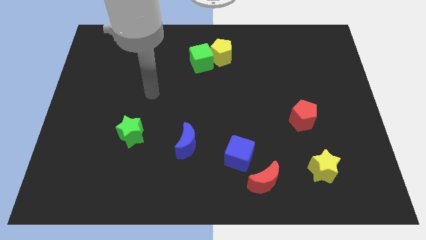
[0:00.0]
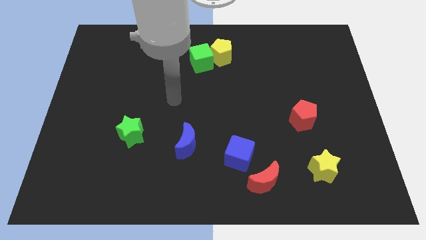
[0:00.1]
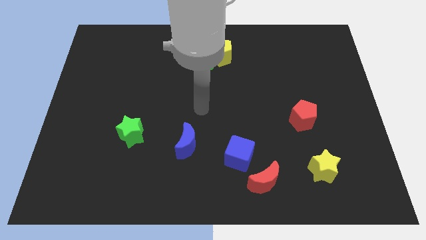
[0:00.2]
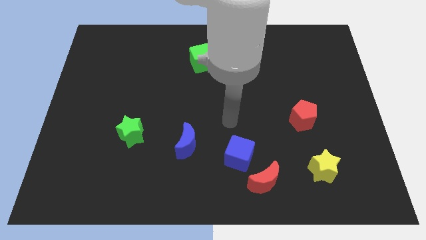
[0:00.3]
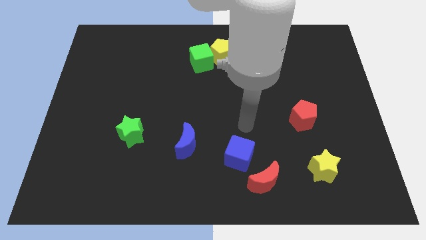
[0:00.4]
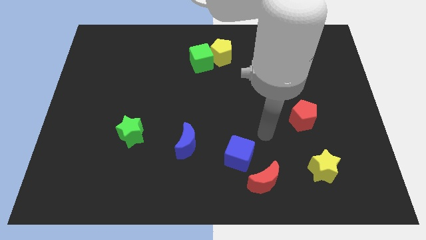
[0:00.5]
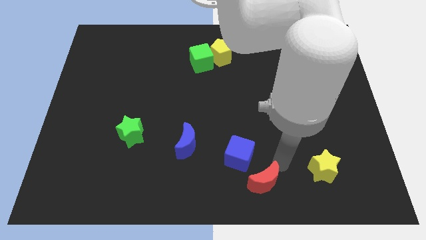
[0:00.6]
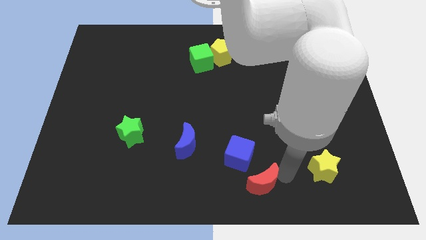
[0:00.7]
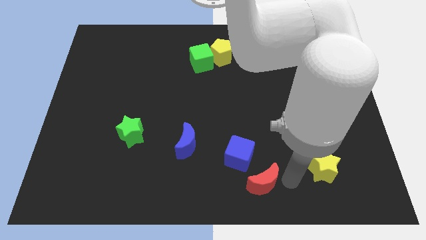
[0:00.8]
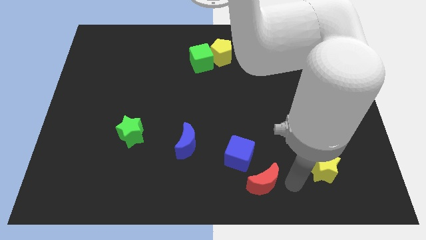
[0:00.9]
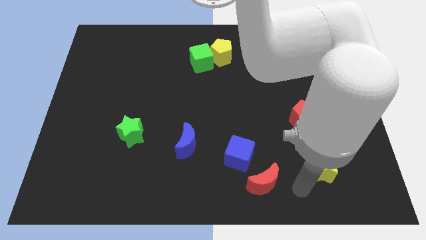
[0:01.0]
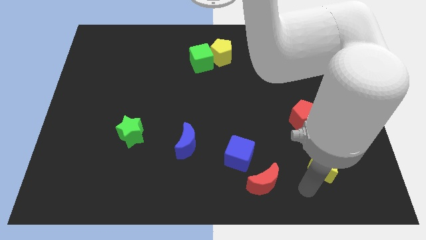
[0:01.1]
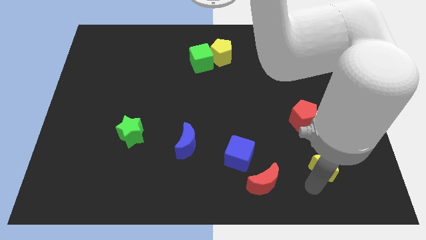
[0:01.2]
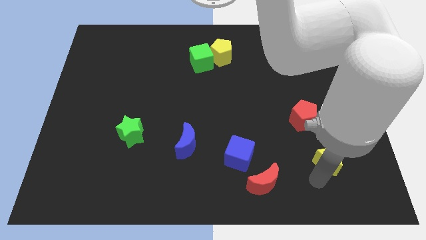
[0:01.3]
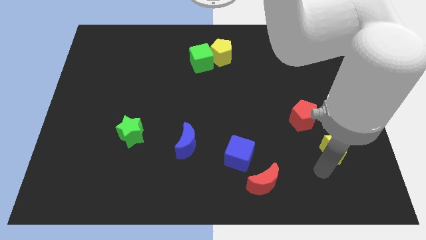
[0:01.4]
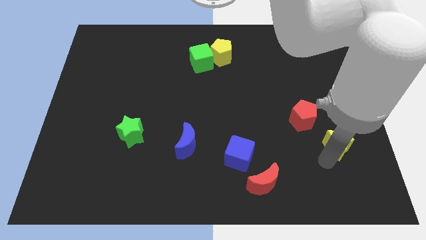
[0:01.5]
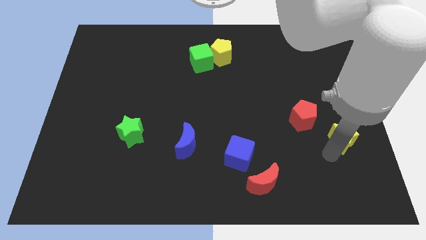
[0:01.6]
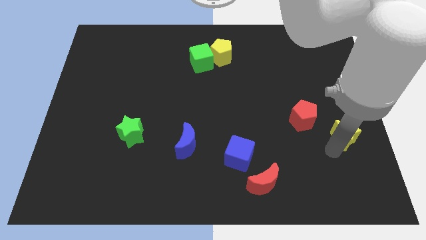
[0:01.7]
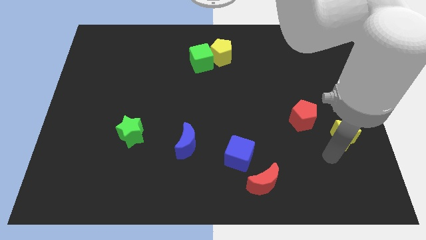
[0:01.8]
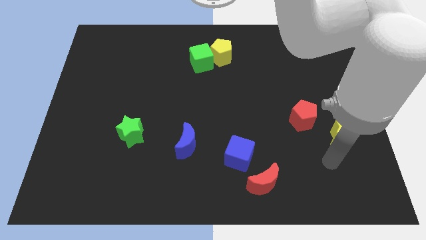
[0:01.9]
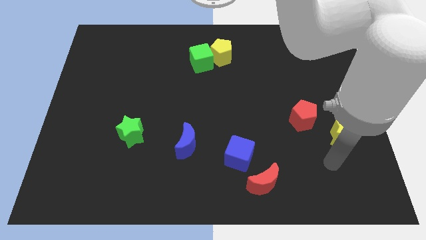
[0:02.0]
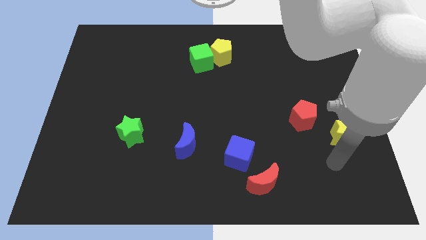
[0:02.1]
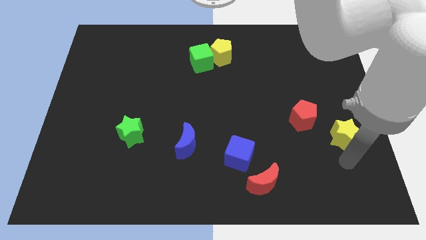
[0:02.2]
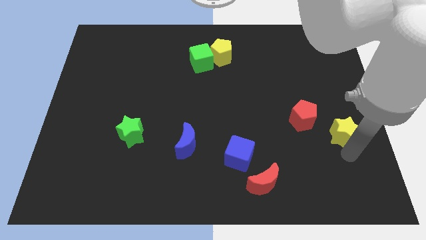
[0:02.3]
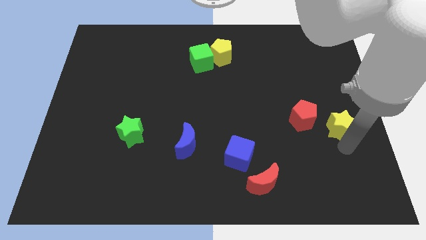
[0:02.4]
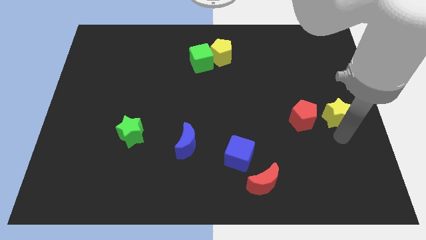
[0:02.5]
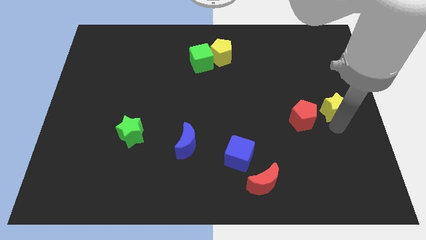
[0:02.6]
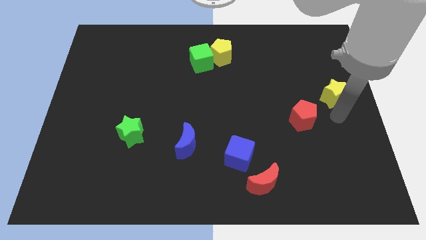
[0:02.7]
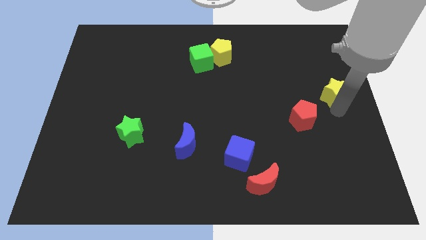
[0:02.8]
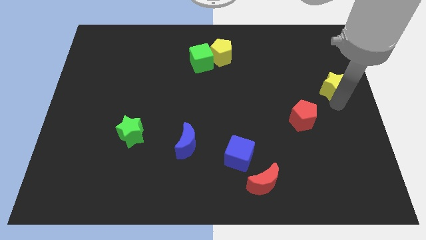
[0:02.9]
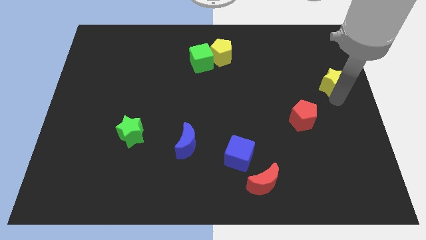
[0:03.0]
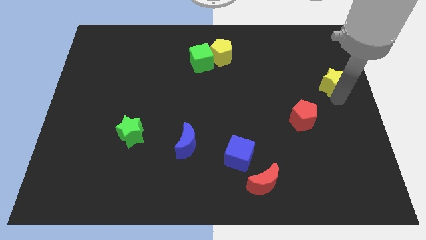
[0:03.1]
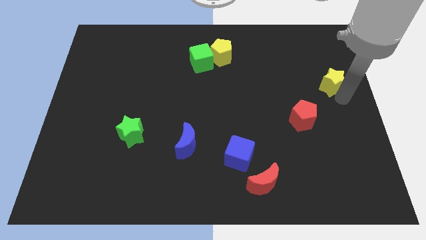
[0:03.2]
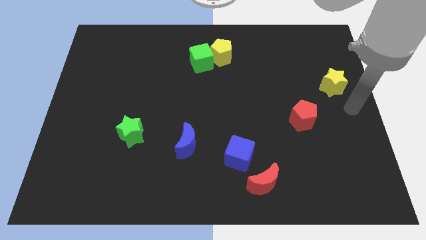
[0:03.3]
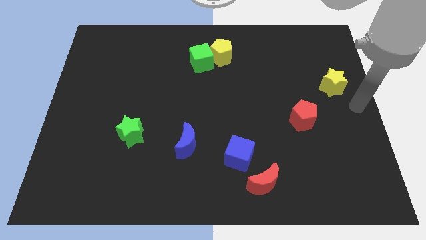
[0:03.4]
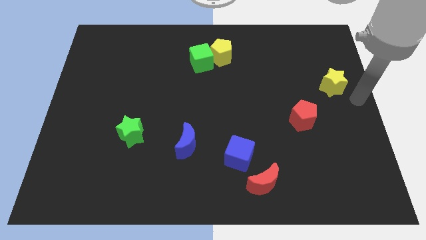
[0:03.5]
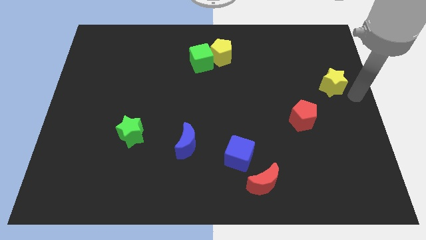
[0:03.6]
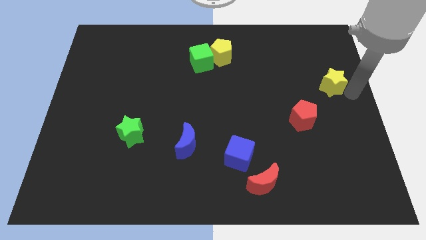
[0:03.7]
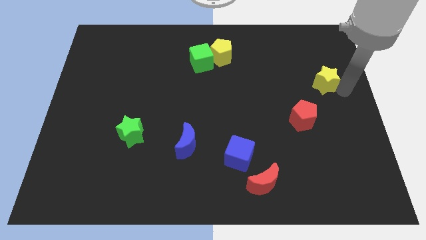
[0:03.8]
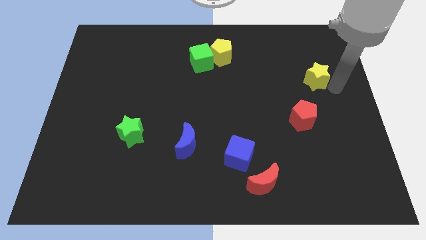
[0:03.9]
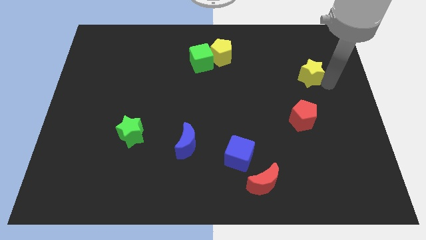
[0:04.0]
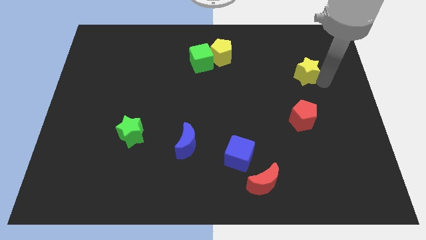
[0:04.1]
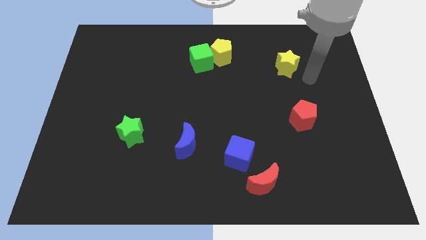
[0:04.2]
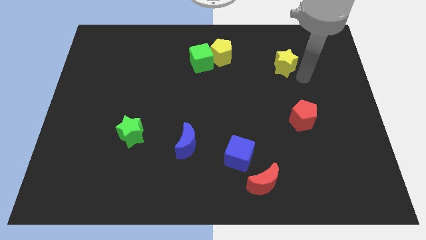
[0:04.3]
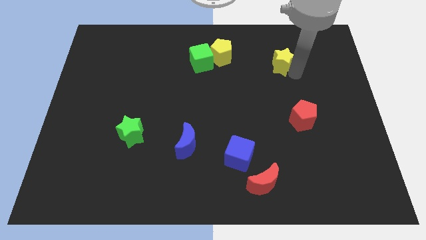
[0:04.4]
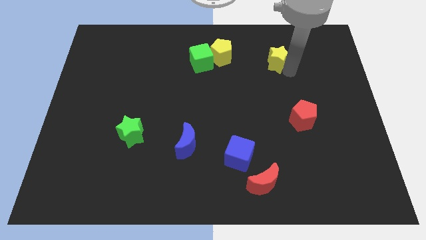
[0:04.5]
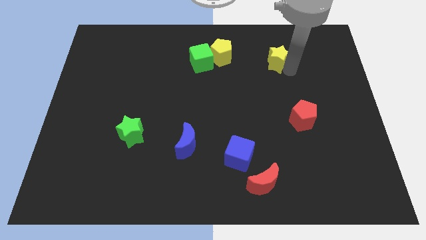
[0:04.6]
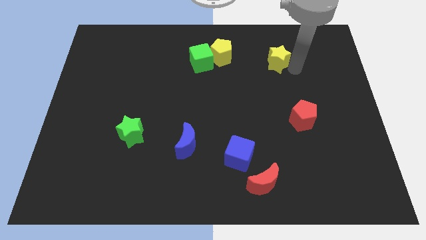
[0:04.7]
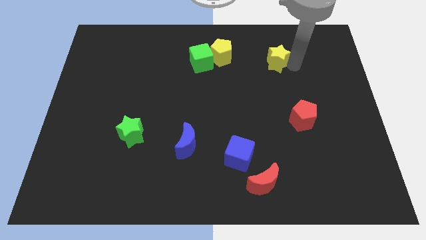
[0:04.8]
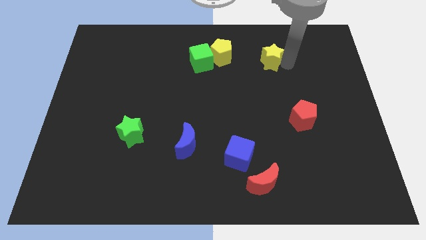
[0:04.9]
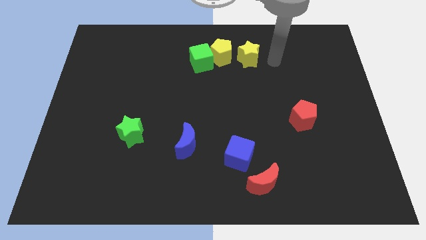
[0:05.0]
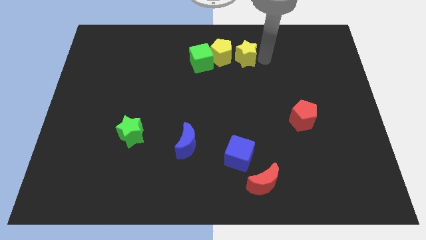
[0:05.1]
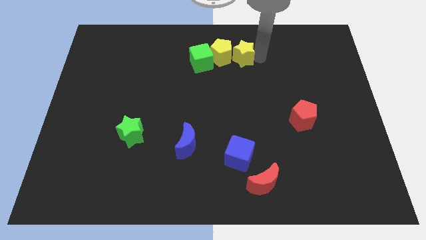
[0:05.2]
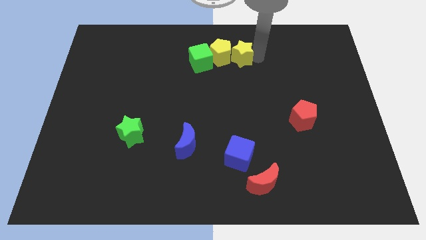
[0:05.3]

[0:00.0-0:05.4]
move the yellow star close to the yellow pentagon

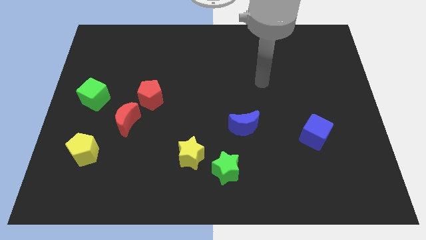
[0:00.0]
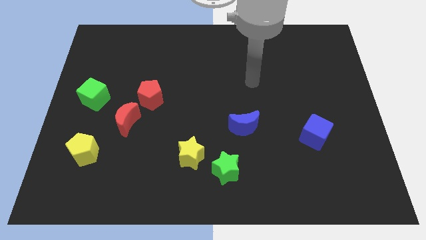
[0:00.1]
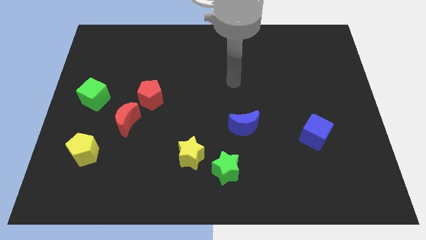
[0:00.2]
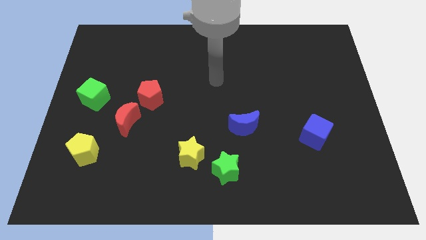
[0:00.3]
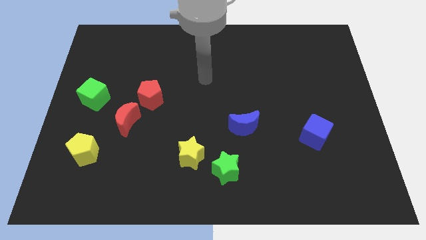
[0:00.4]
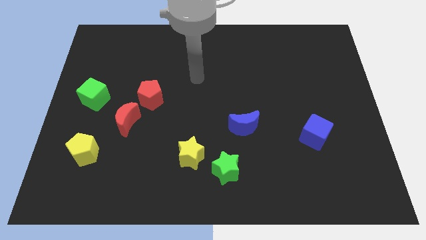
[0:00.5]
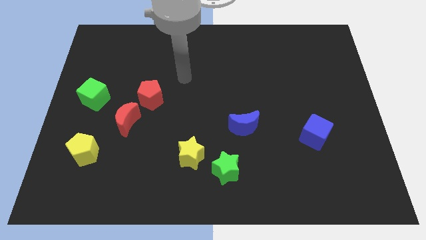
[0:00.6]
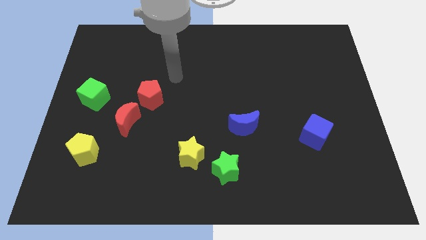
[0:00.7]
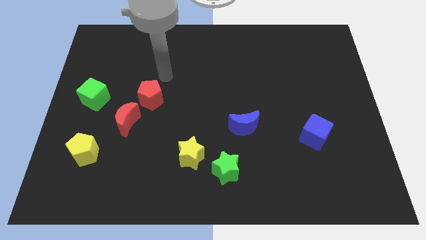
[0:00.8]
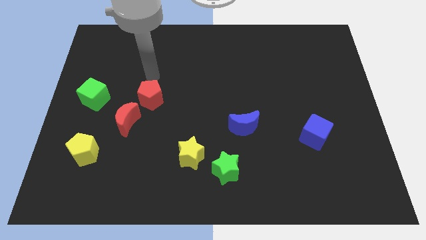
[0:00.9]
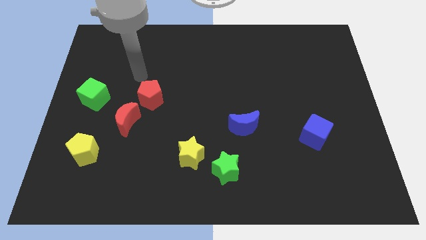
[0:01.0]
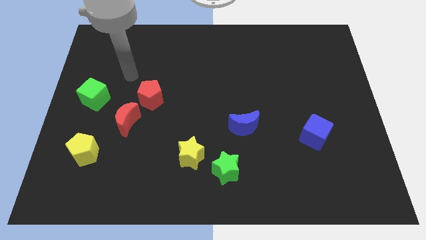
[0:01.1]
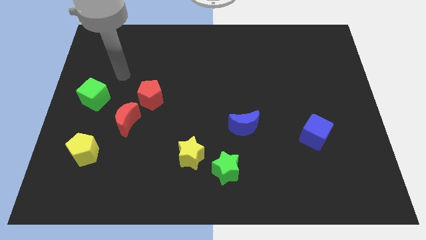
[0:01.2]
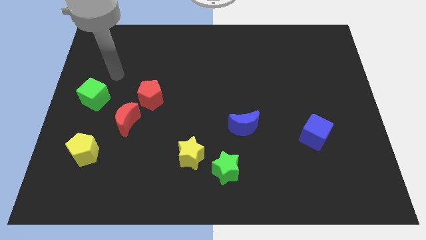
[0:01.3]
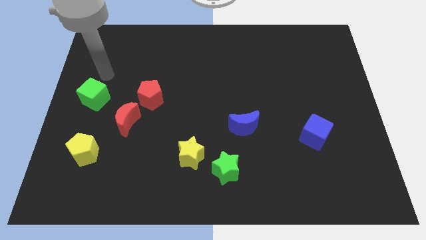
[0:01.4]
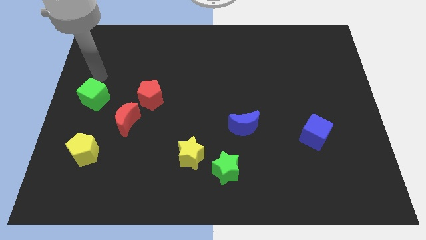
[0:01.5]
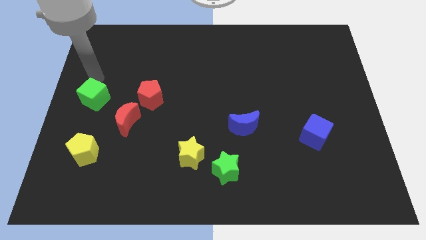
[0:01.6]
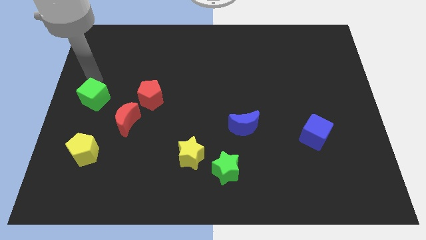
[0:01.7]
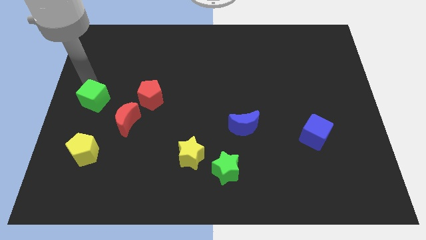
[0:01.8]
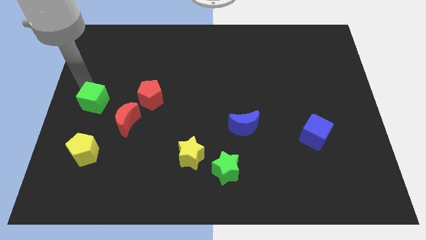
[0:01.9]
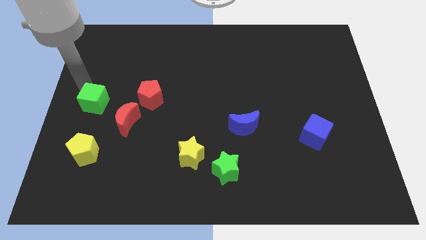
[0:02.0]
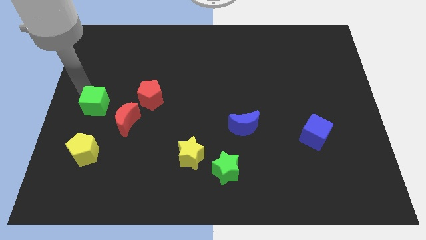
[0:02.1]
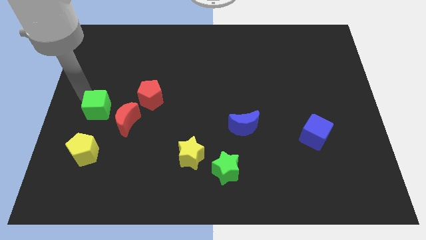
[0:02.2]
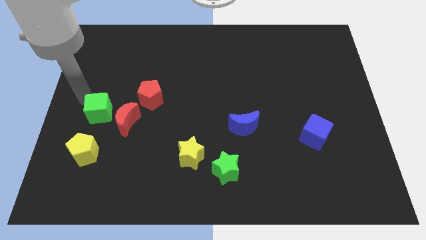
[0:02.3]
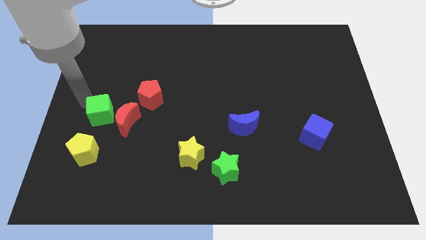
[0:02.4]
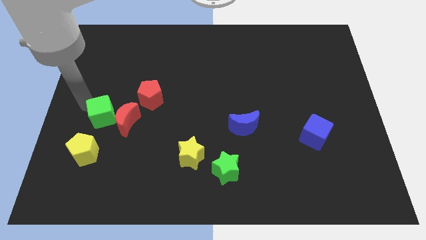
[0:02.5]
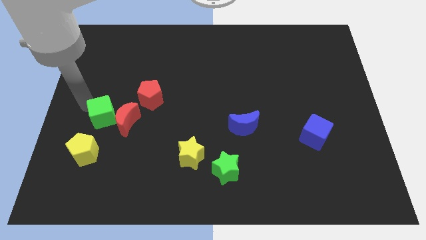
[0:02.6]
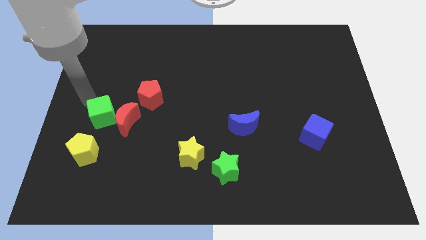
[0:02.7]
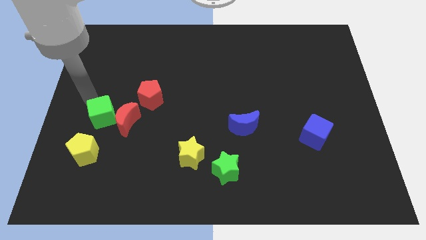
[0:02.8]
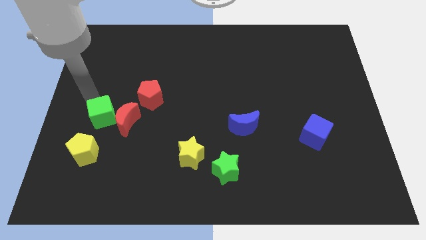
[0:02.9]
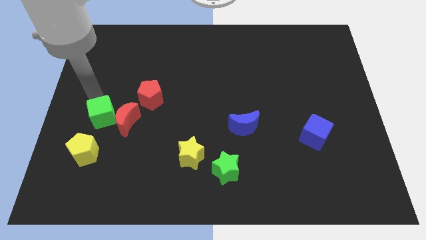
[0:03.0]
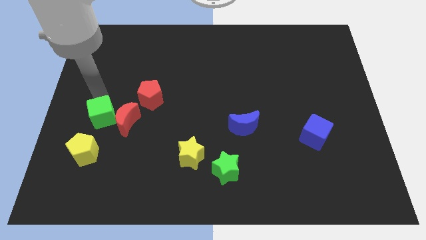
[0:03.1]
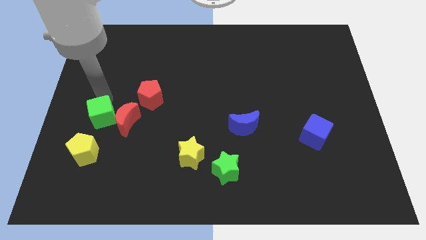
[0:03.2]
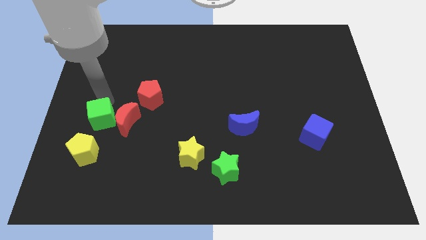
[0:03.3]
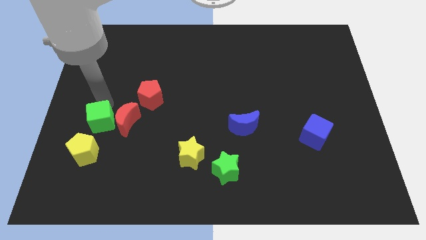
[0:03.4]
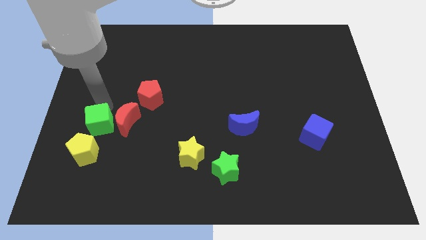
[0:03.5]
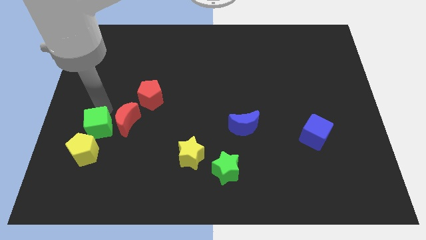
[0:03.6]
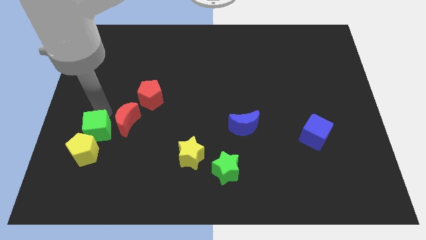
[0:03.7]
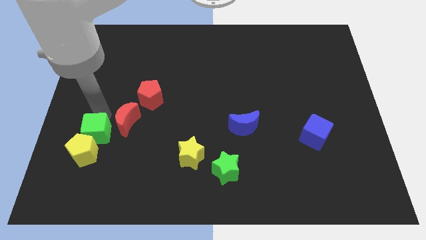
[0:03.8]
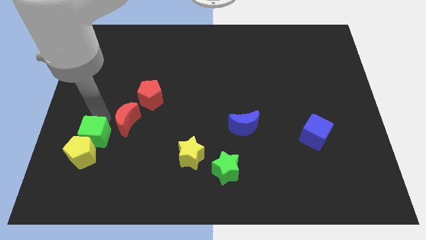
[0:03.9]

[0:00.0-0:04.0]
push the green cube next to the yellow pentagon
